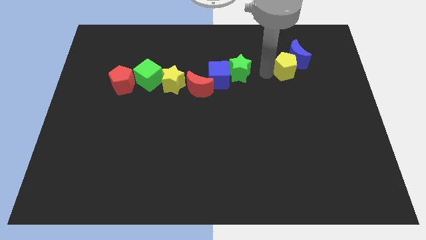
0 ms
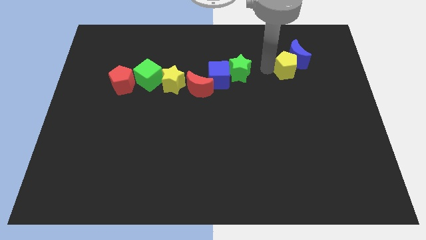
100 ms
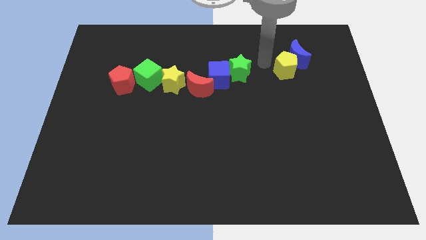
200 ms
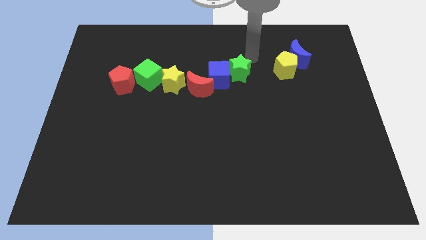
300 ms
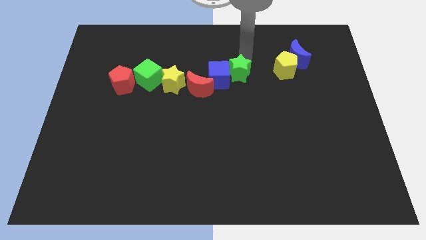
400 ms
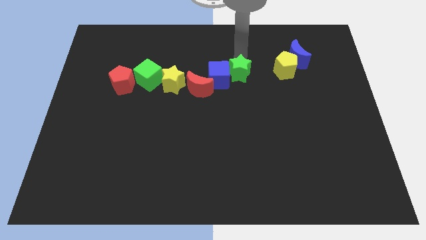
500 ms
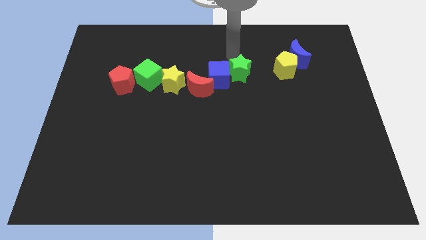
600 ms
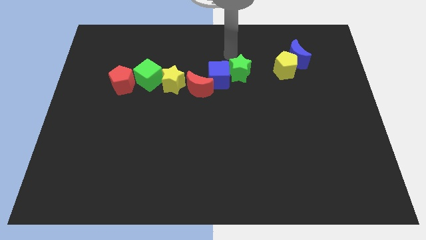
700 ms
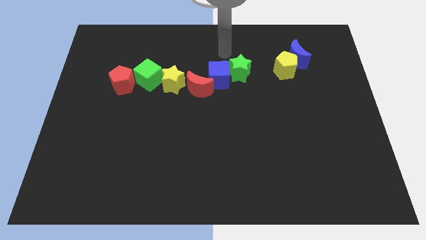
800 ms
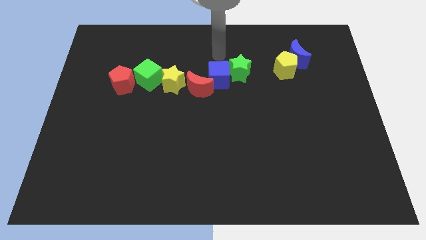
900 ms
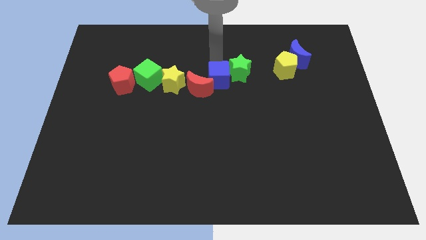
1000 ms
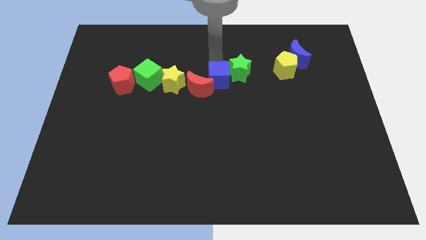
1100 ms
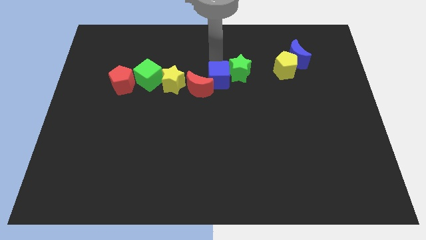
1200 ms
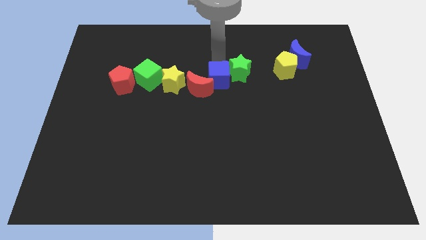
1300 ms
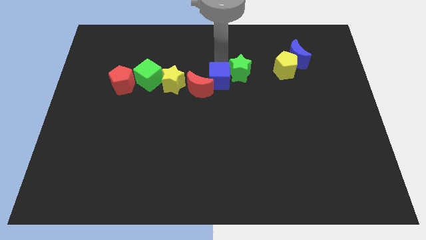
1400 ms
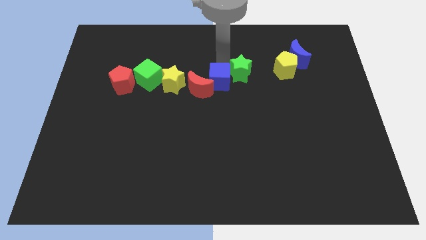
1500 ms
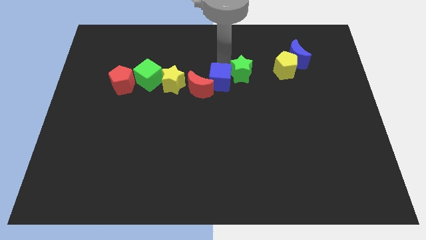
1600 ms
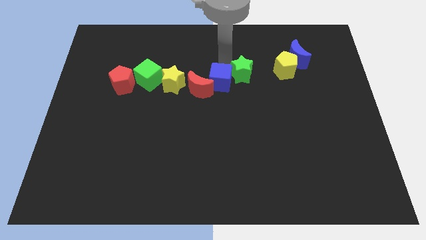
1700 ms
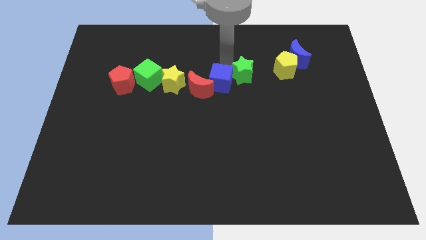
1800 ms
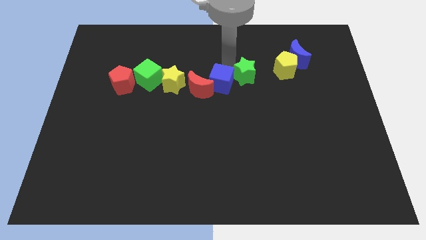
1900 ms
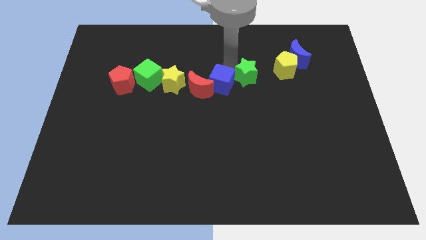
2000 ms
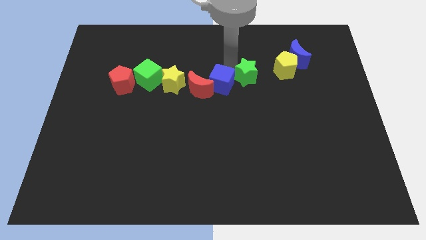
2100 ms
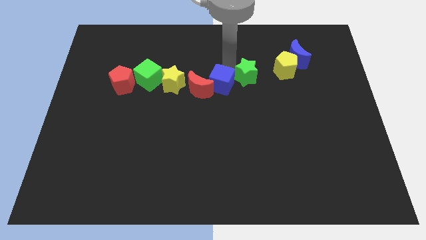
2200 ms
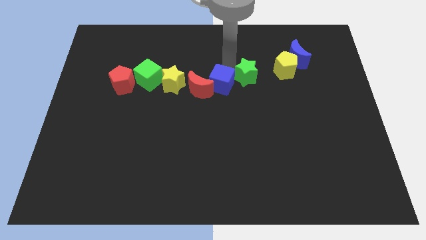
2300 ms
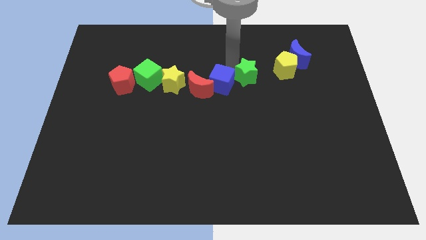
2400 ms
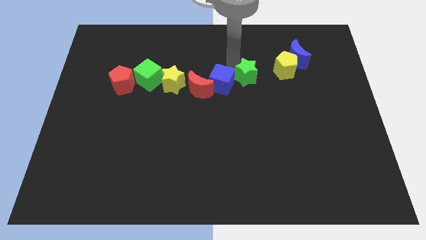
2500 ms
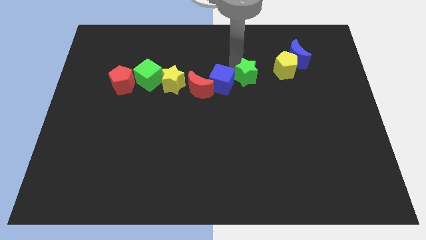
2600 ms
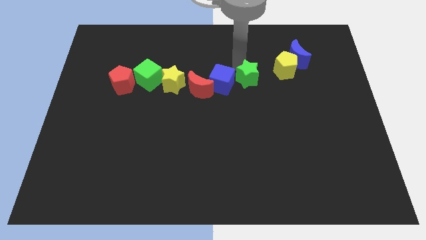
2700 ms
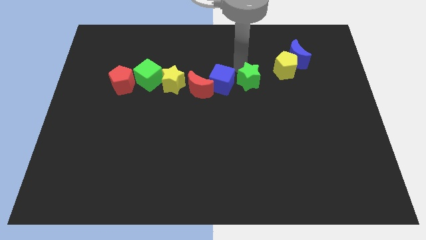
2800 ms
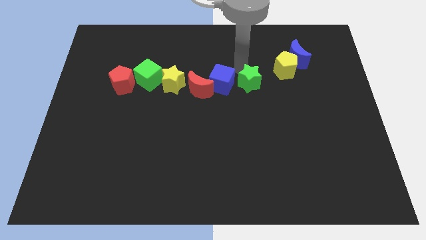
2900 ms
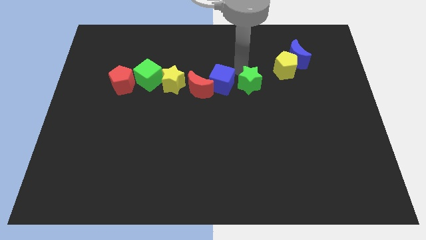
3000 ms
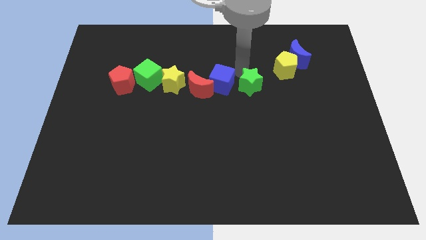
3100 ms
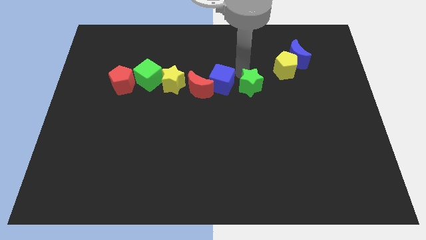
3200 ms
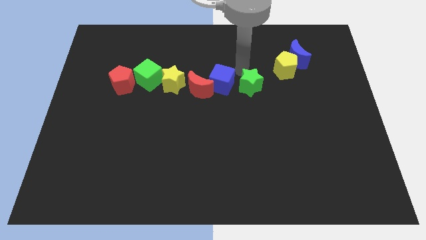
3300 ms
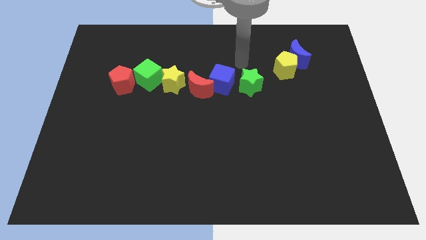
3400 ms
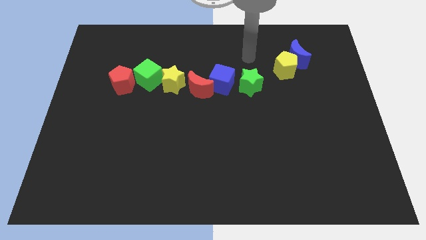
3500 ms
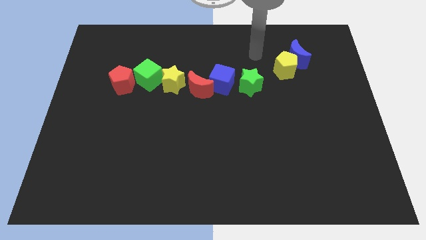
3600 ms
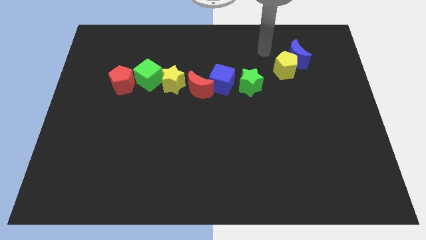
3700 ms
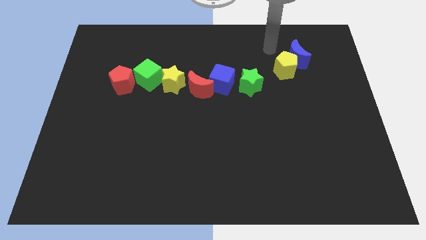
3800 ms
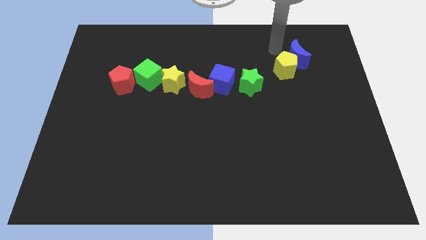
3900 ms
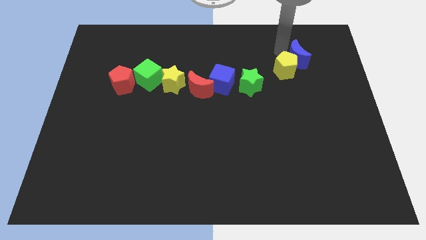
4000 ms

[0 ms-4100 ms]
slide the green star diagonally bottom left to the yellow pentagon

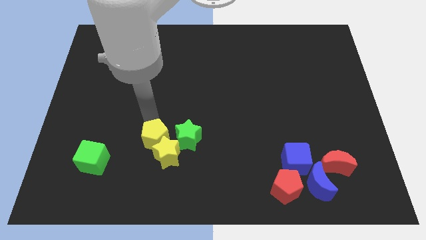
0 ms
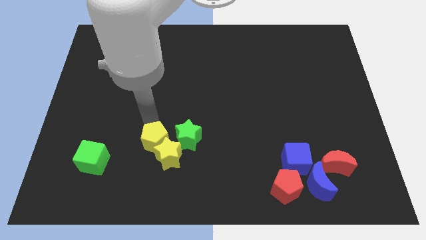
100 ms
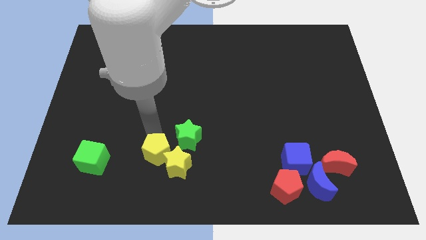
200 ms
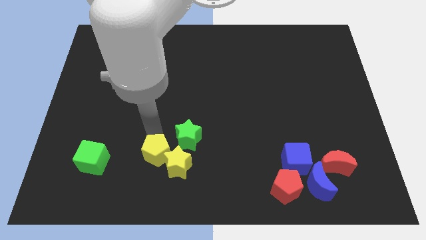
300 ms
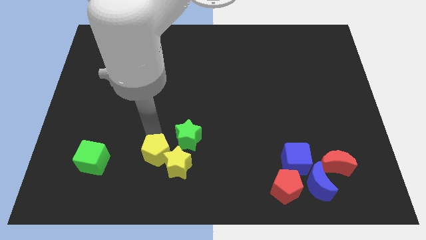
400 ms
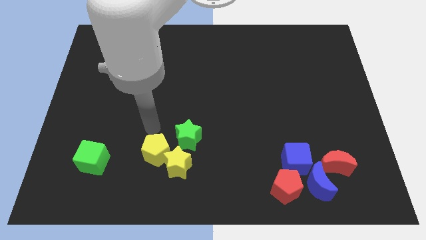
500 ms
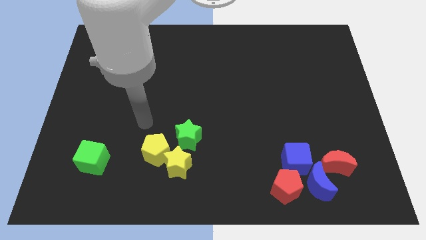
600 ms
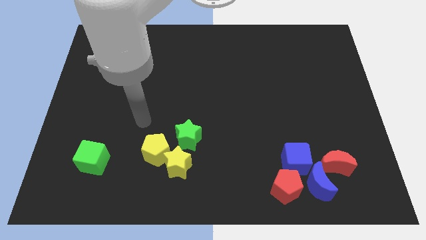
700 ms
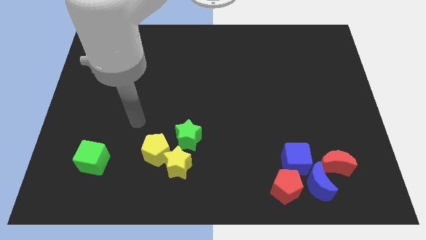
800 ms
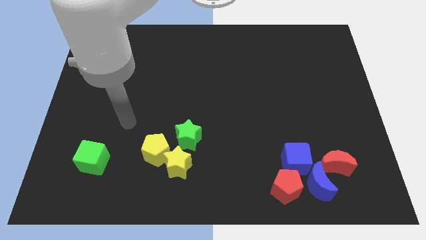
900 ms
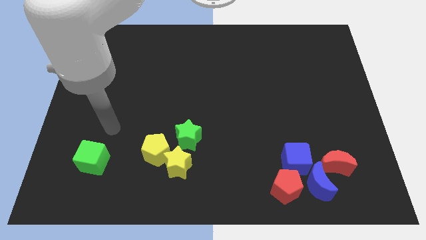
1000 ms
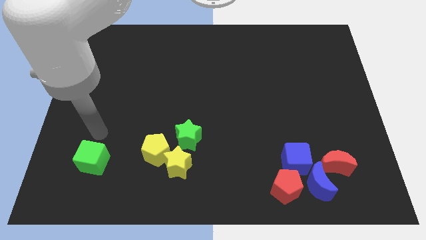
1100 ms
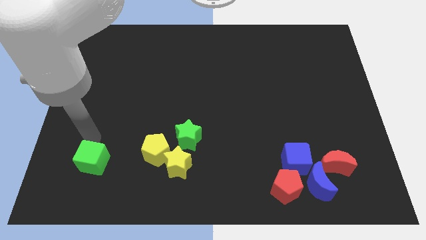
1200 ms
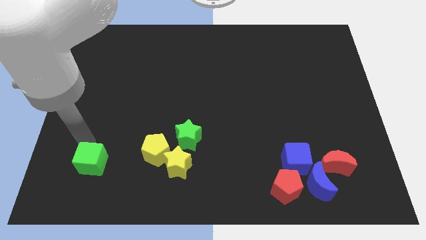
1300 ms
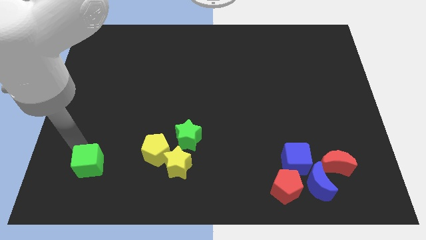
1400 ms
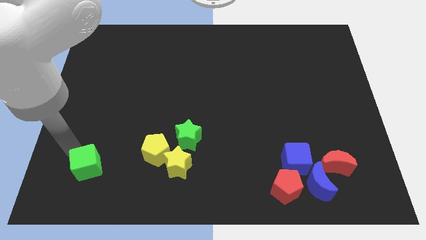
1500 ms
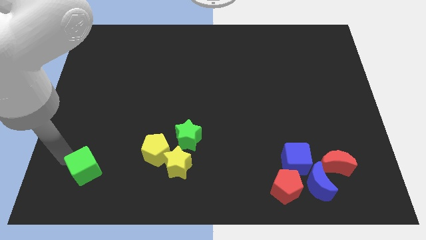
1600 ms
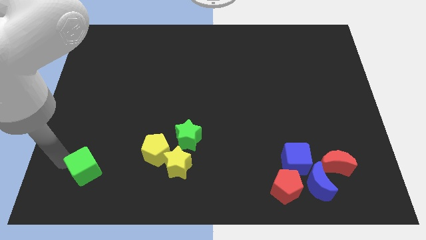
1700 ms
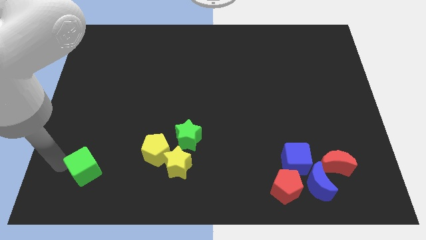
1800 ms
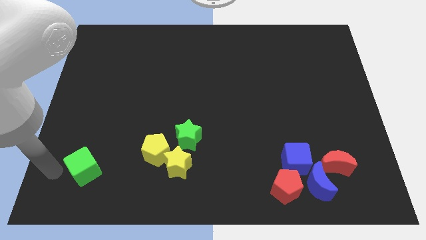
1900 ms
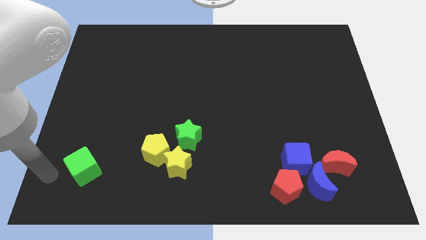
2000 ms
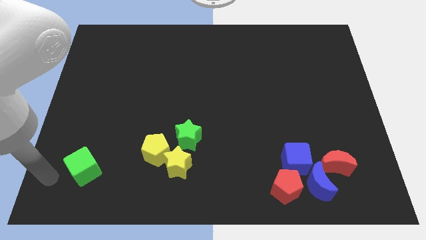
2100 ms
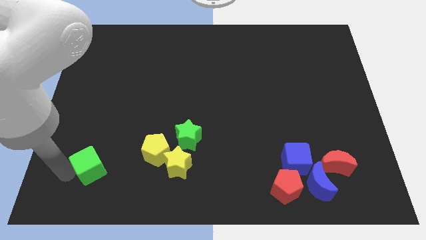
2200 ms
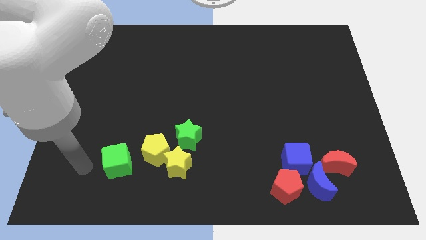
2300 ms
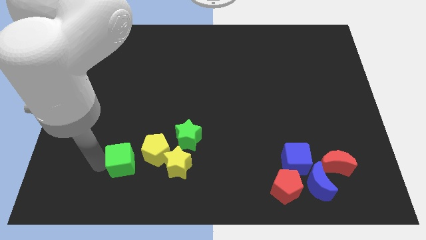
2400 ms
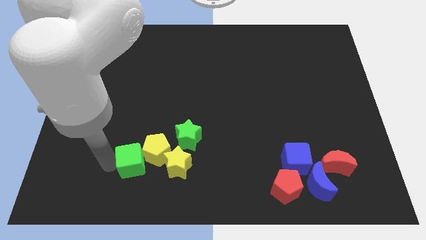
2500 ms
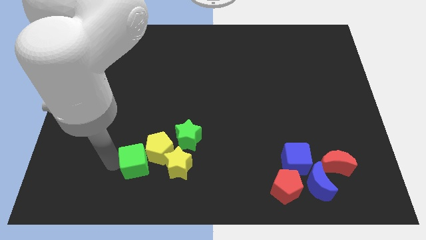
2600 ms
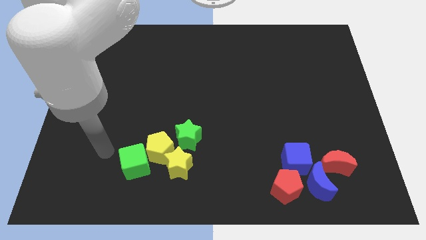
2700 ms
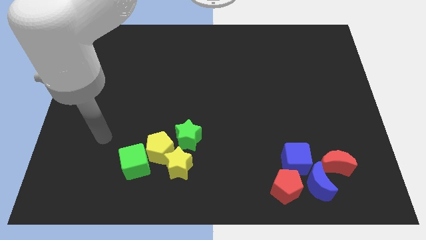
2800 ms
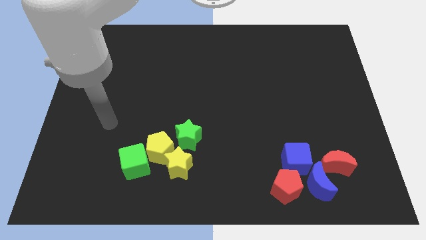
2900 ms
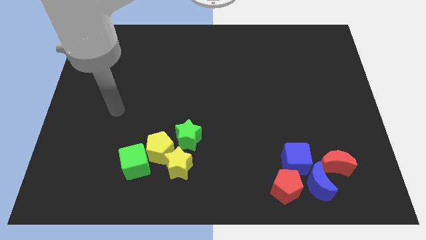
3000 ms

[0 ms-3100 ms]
push the green cube and yellow pentagon into the yellow star

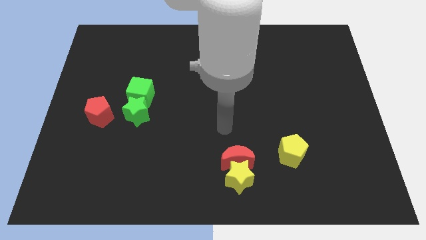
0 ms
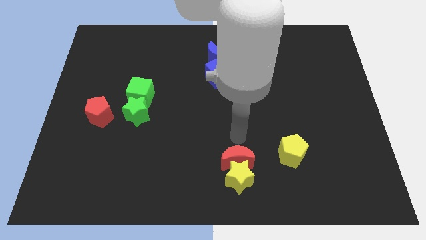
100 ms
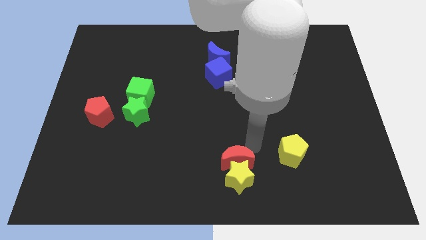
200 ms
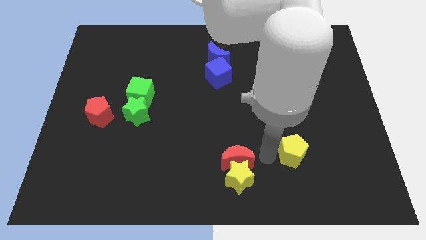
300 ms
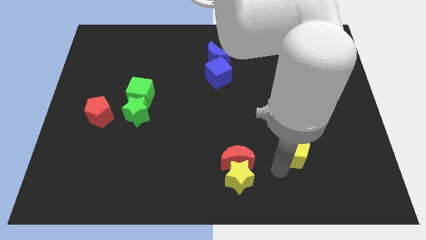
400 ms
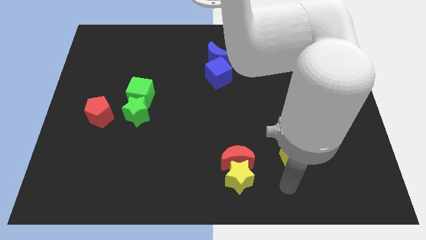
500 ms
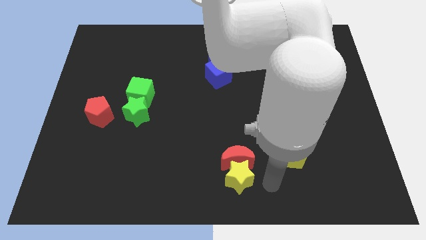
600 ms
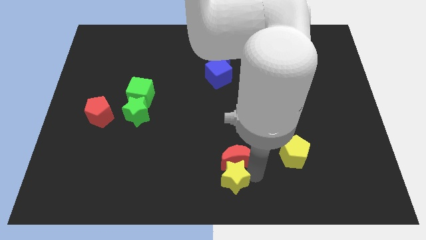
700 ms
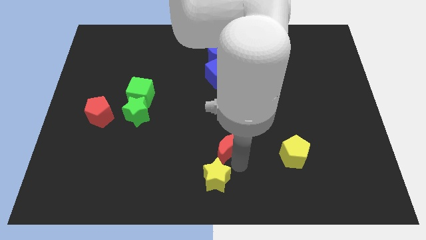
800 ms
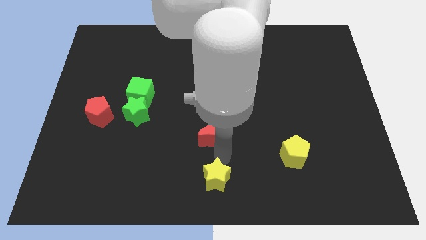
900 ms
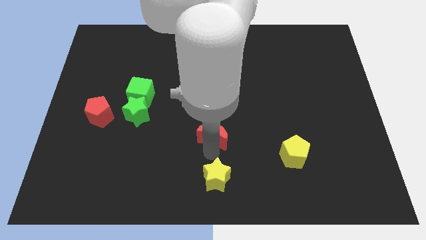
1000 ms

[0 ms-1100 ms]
separate the red moon and the yellow star

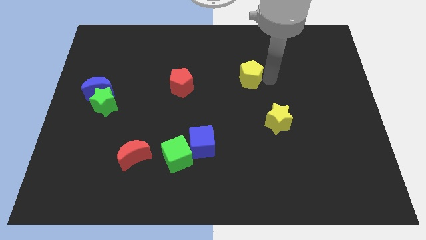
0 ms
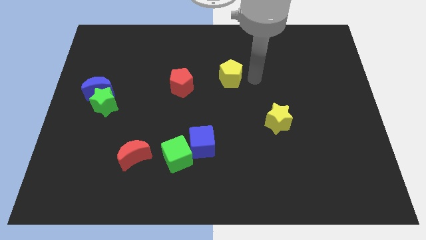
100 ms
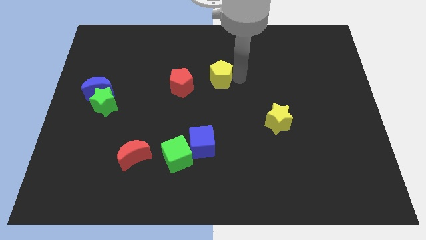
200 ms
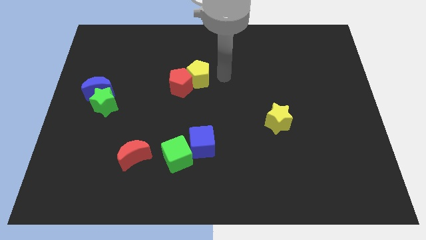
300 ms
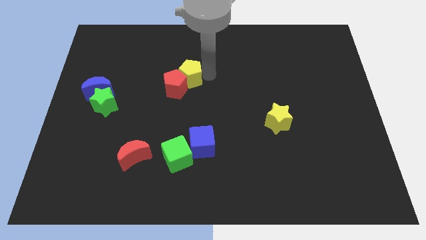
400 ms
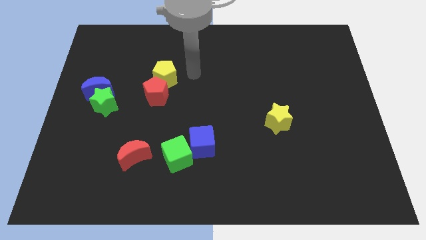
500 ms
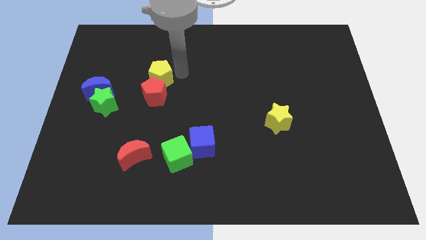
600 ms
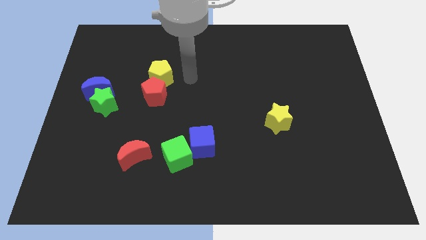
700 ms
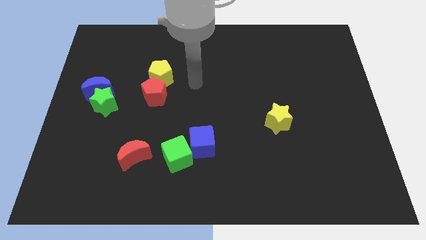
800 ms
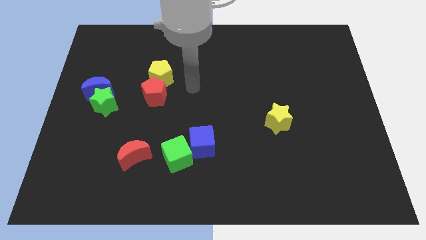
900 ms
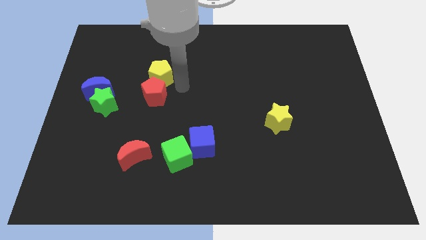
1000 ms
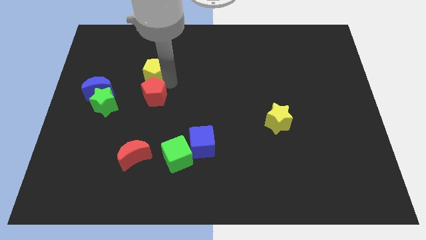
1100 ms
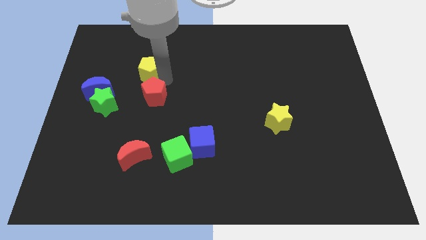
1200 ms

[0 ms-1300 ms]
push the yellow pentagon to the top of the red pentagon
